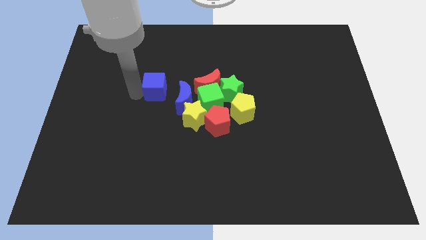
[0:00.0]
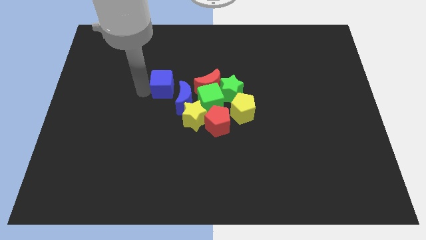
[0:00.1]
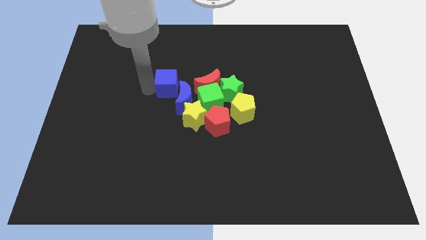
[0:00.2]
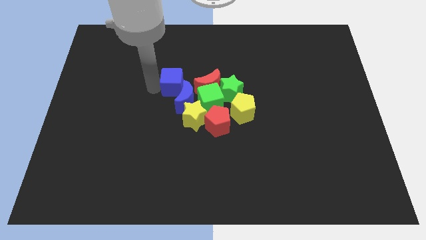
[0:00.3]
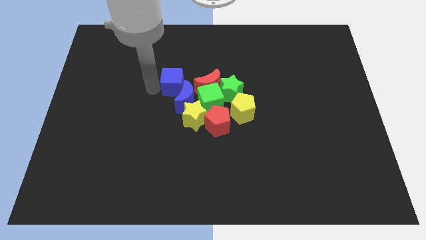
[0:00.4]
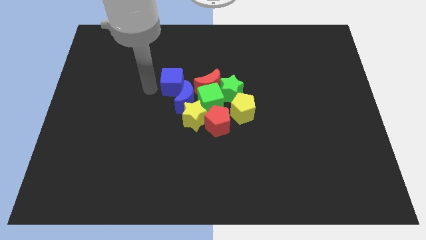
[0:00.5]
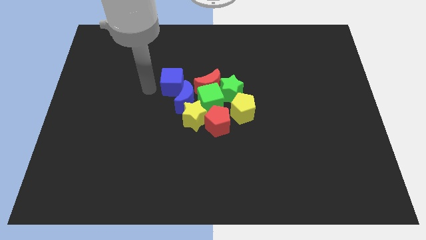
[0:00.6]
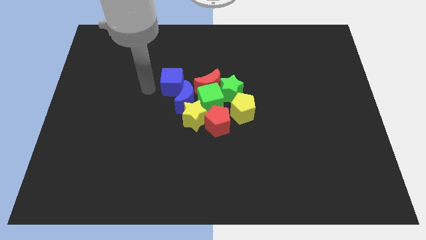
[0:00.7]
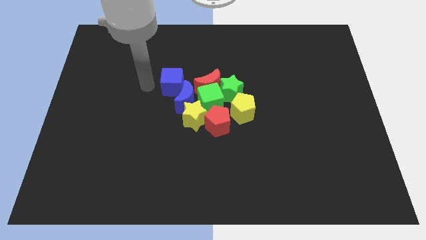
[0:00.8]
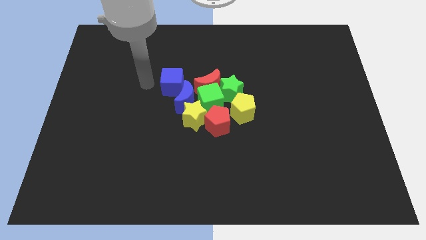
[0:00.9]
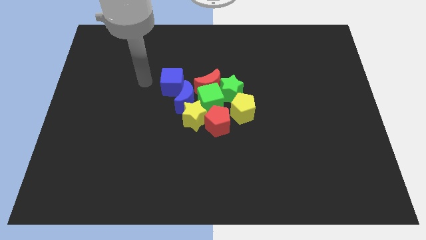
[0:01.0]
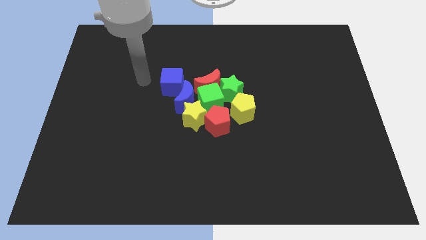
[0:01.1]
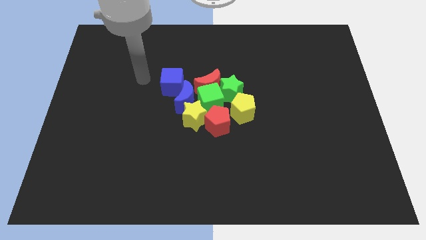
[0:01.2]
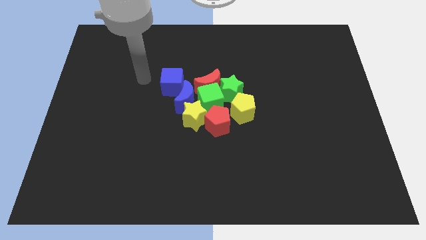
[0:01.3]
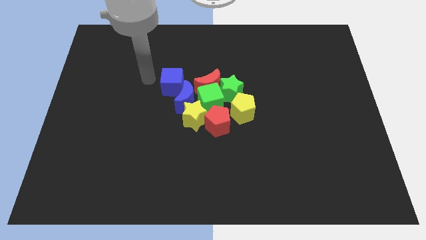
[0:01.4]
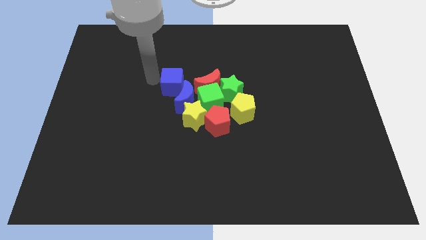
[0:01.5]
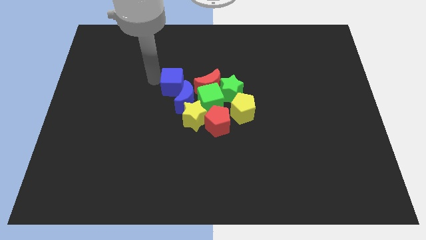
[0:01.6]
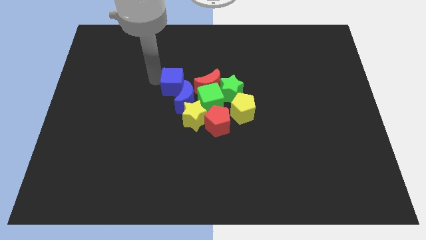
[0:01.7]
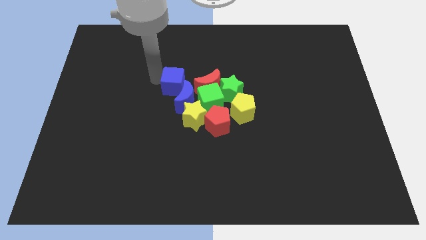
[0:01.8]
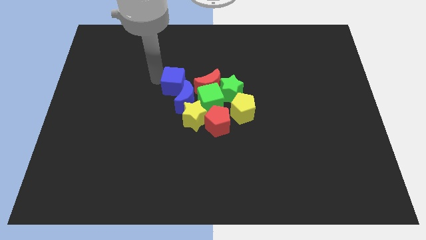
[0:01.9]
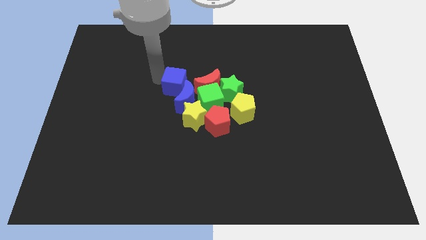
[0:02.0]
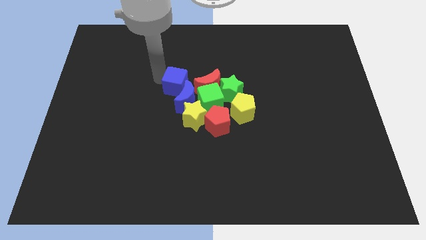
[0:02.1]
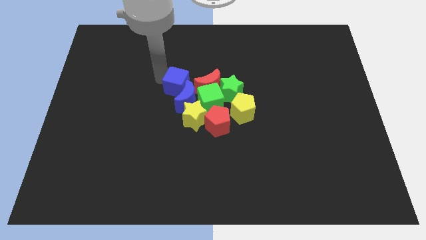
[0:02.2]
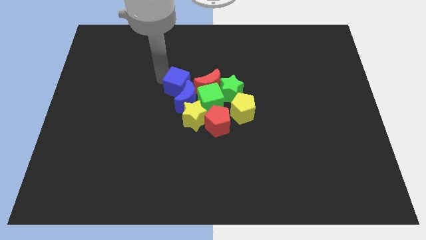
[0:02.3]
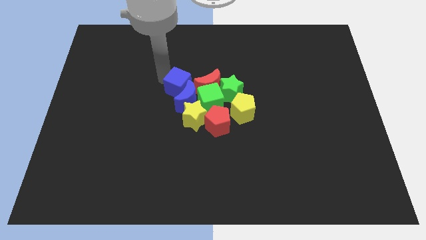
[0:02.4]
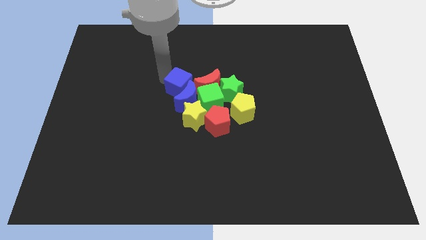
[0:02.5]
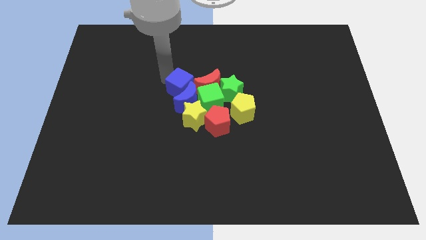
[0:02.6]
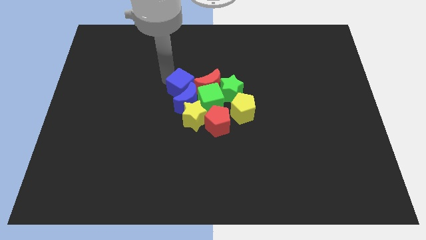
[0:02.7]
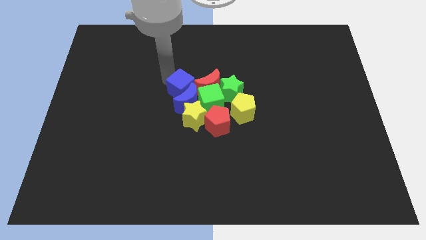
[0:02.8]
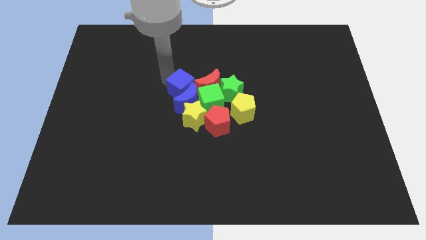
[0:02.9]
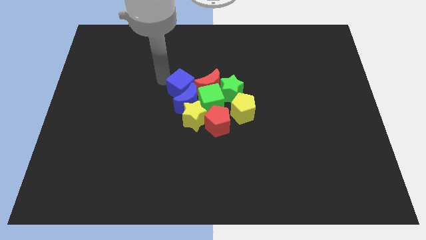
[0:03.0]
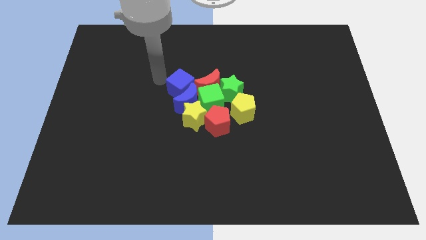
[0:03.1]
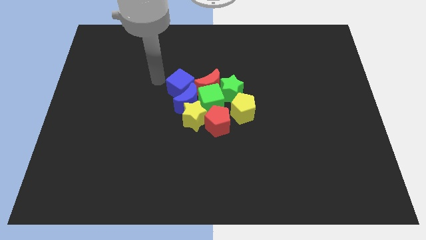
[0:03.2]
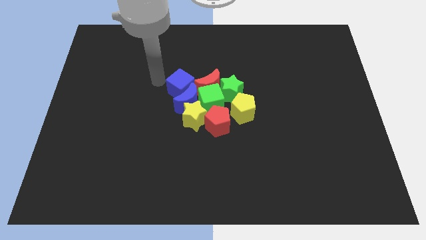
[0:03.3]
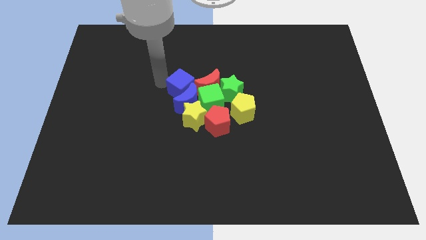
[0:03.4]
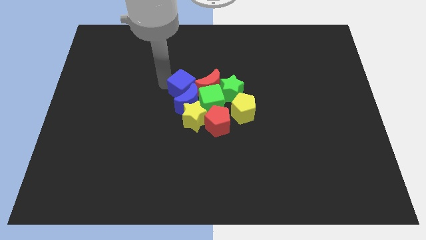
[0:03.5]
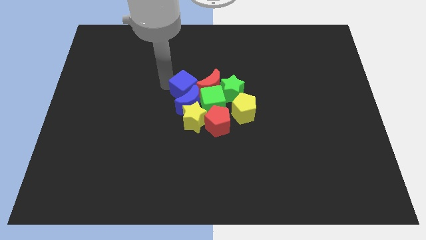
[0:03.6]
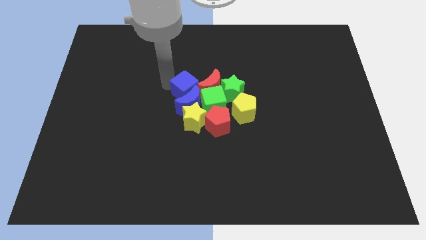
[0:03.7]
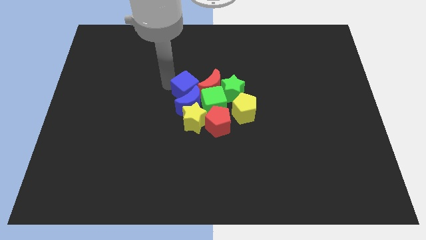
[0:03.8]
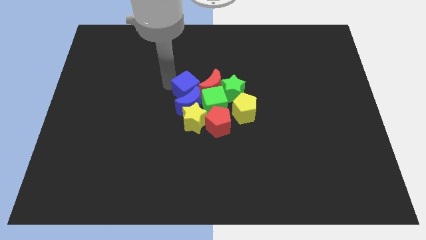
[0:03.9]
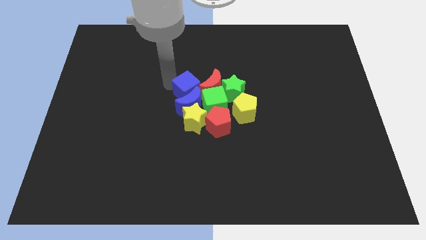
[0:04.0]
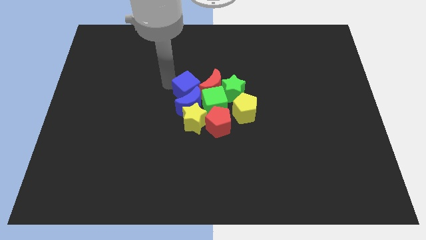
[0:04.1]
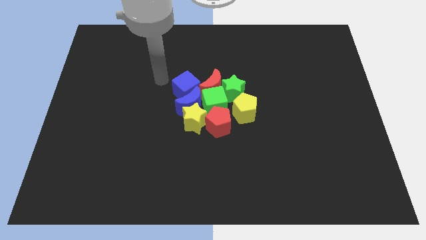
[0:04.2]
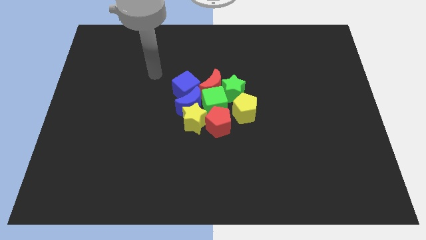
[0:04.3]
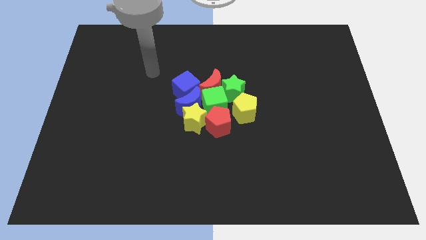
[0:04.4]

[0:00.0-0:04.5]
move blue cube into the blue moon

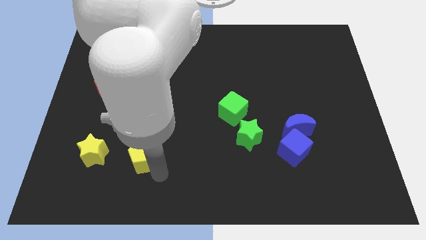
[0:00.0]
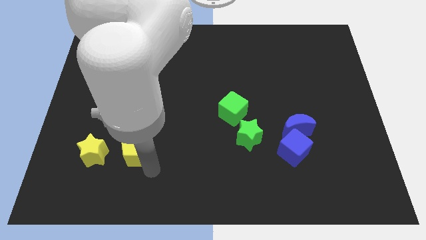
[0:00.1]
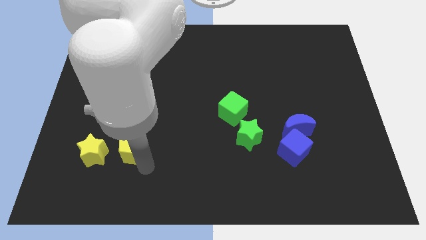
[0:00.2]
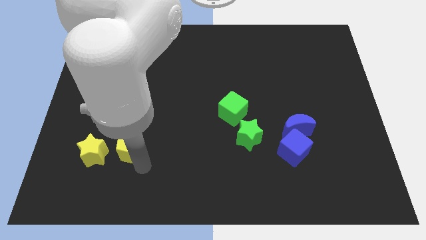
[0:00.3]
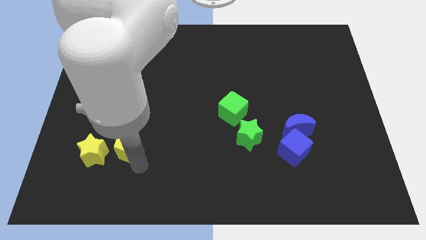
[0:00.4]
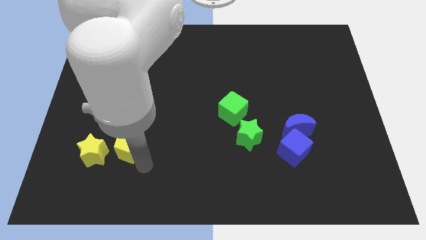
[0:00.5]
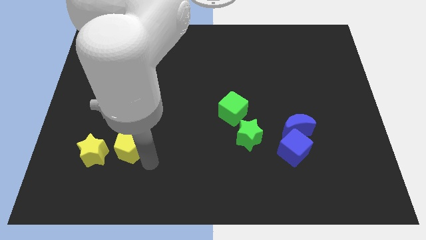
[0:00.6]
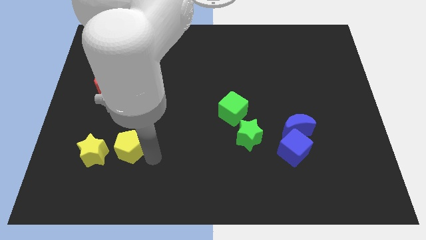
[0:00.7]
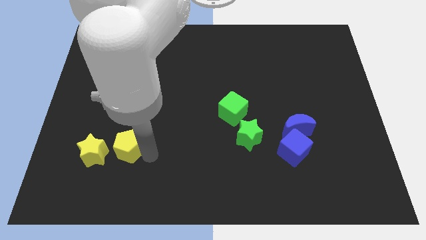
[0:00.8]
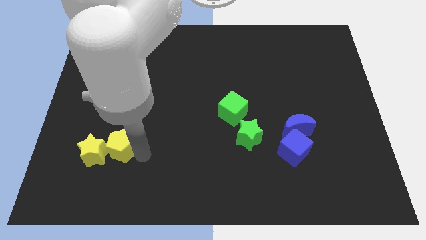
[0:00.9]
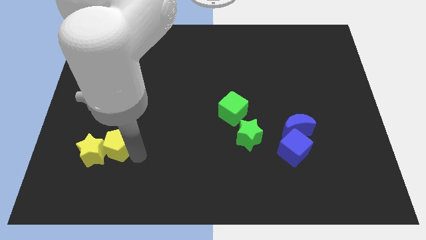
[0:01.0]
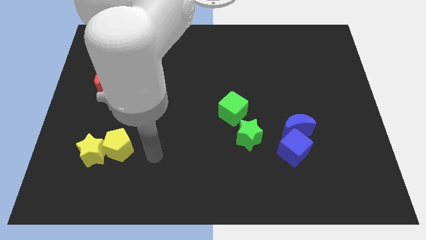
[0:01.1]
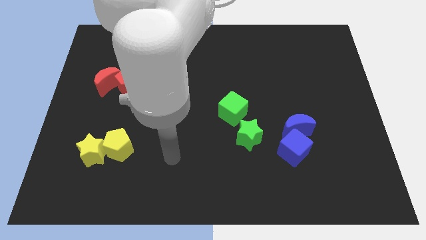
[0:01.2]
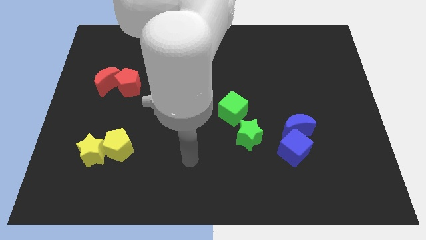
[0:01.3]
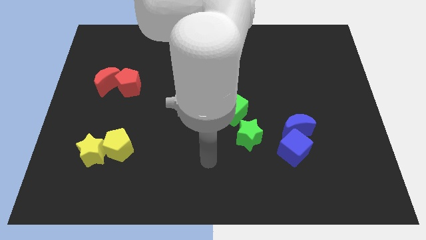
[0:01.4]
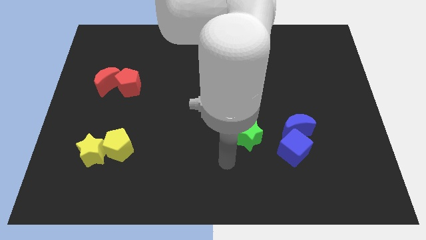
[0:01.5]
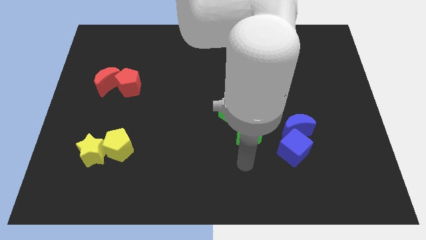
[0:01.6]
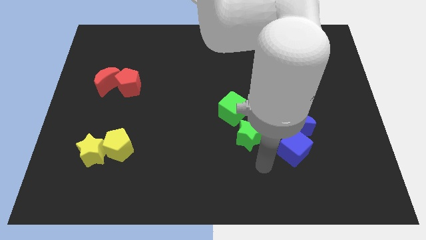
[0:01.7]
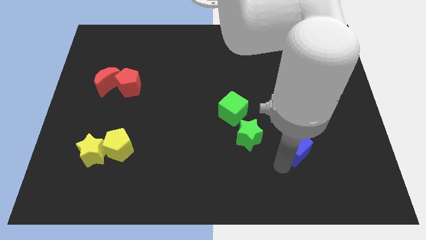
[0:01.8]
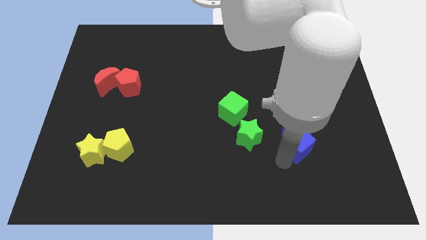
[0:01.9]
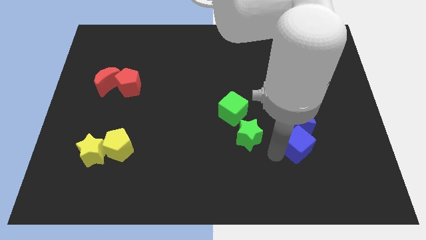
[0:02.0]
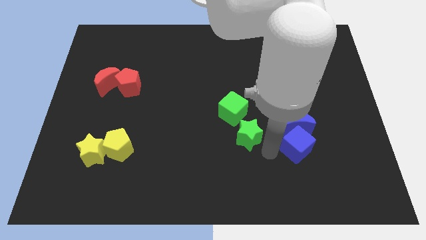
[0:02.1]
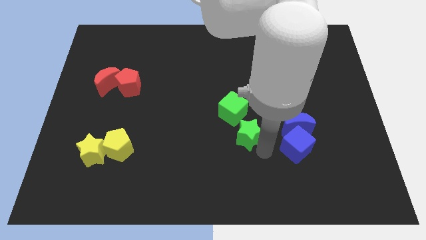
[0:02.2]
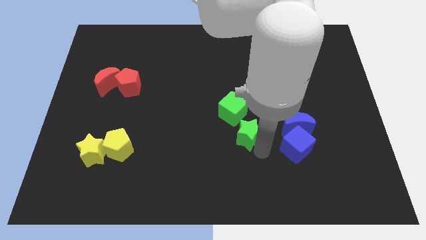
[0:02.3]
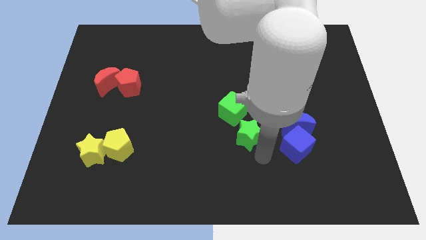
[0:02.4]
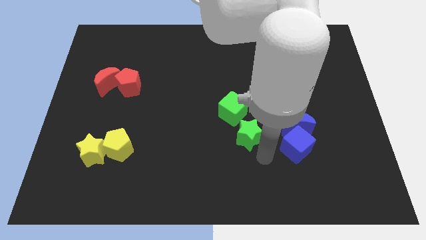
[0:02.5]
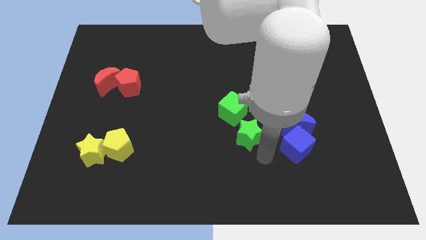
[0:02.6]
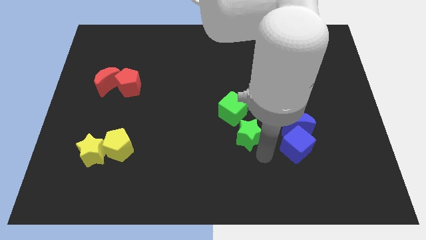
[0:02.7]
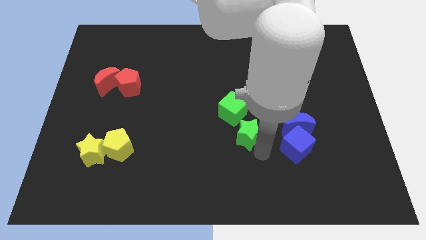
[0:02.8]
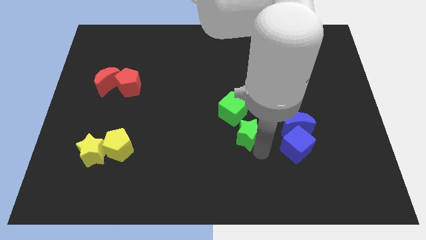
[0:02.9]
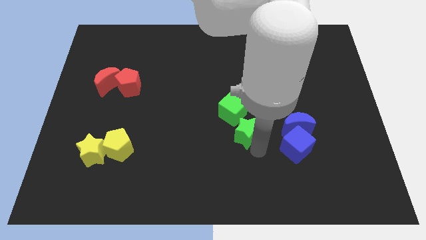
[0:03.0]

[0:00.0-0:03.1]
push the yellow pentagon into yellow star

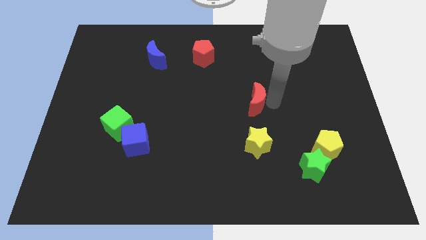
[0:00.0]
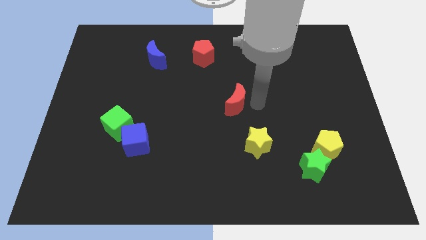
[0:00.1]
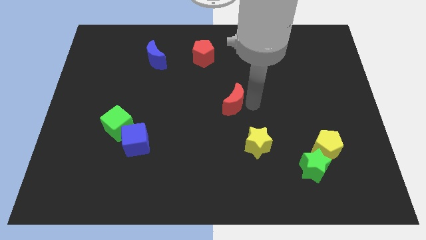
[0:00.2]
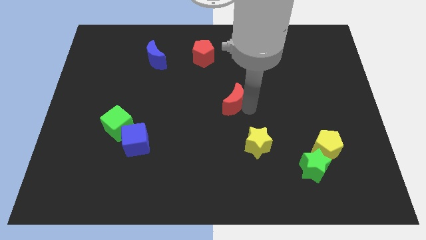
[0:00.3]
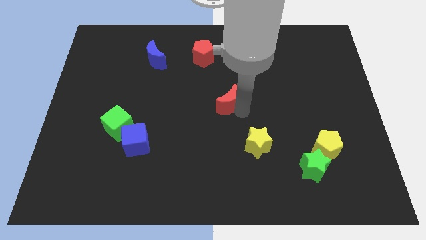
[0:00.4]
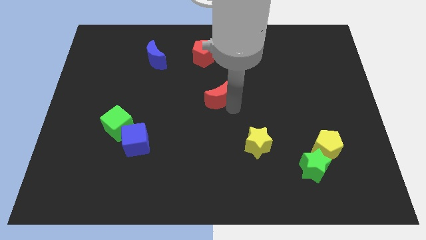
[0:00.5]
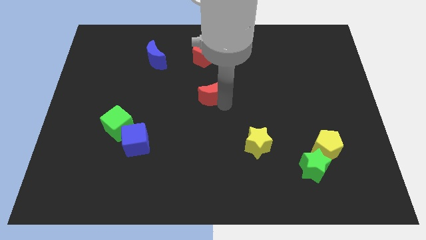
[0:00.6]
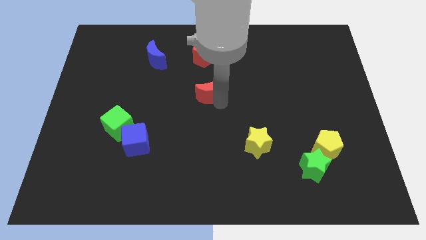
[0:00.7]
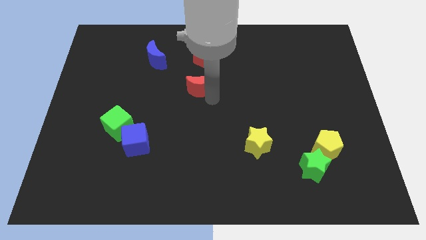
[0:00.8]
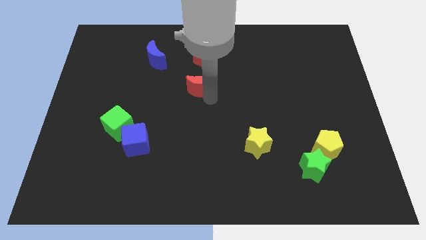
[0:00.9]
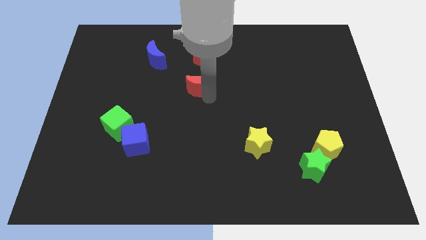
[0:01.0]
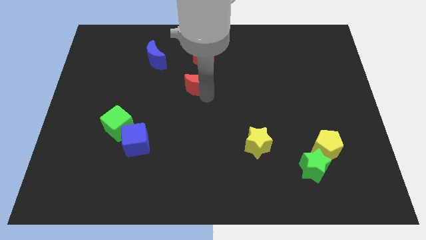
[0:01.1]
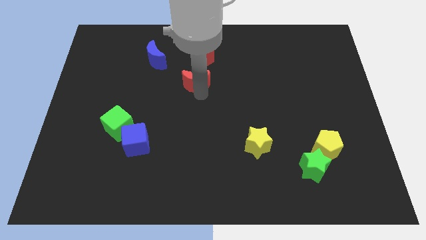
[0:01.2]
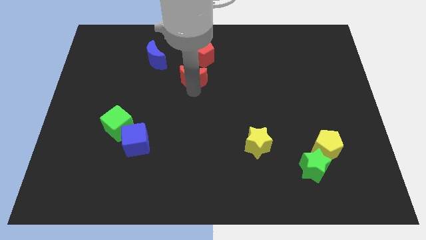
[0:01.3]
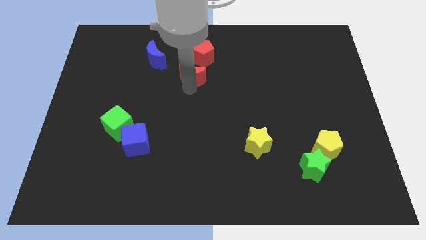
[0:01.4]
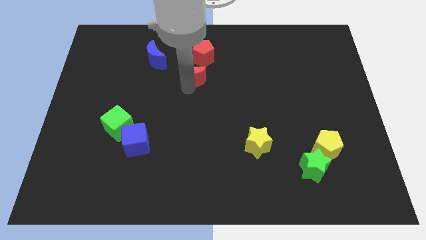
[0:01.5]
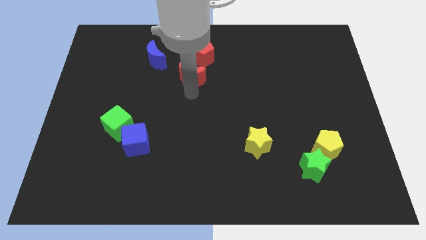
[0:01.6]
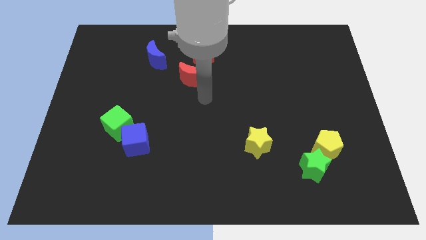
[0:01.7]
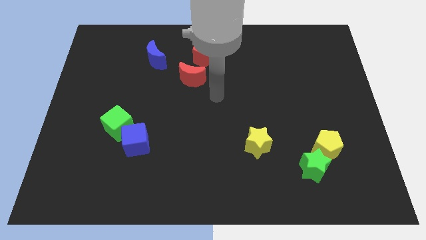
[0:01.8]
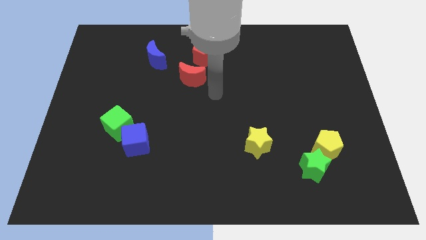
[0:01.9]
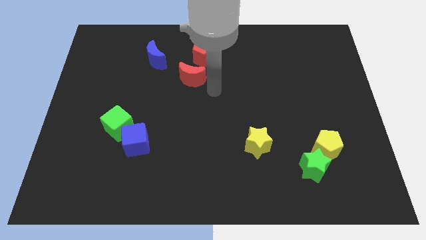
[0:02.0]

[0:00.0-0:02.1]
slide red moon into red pentagon
